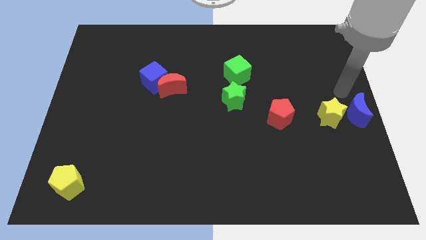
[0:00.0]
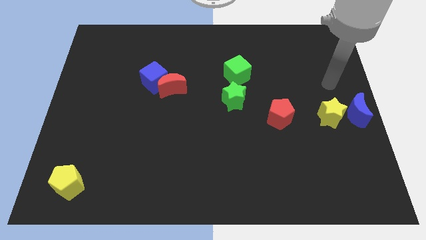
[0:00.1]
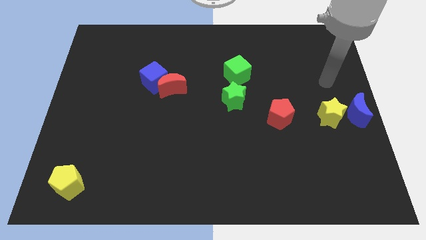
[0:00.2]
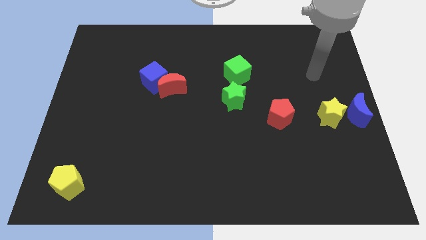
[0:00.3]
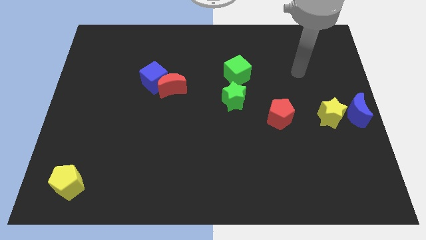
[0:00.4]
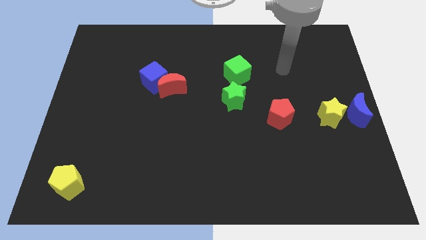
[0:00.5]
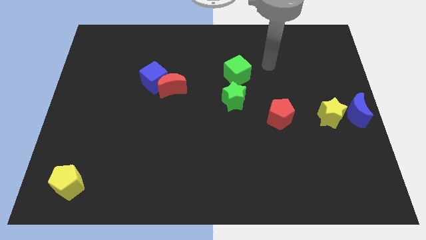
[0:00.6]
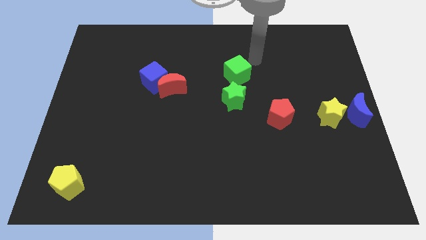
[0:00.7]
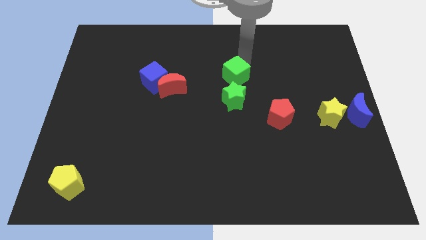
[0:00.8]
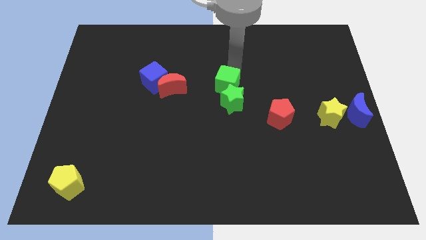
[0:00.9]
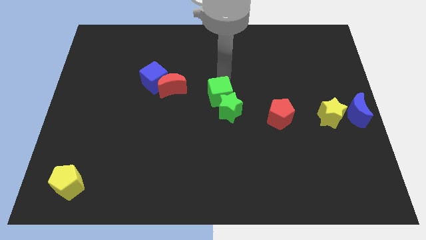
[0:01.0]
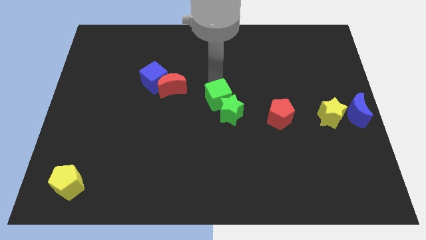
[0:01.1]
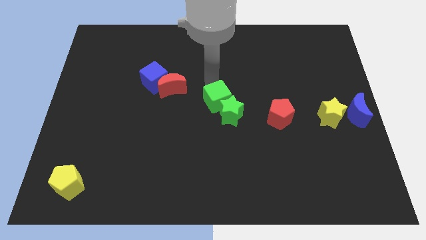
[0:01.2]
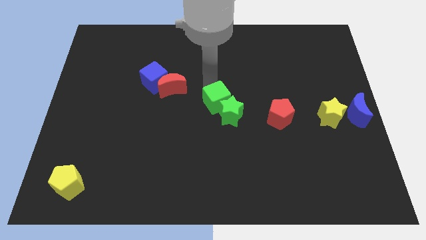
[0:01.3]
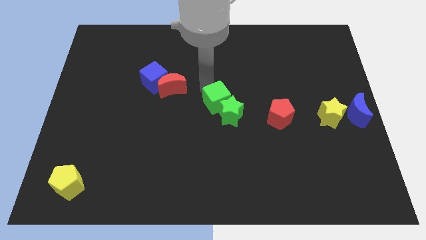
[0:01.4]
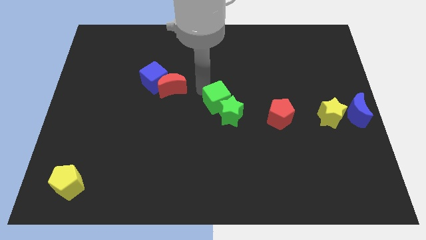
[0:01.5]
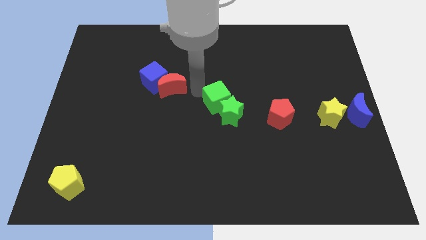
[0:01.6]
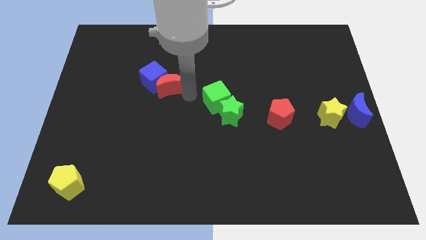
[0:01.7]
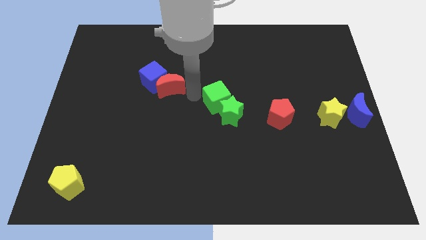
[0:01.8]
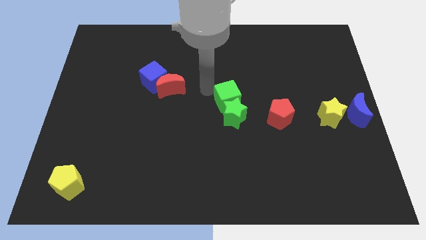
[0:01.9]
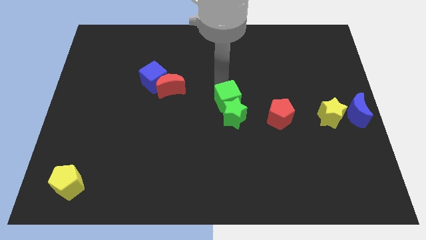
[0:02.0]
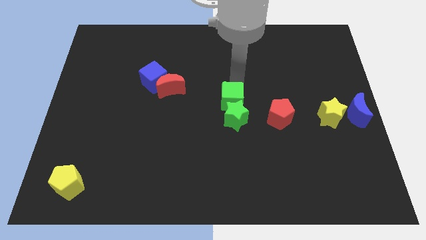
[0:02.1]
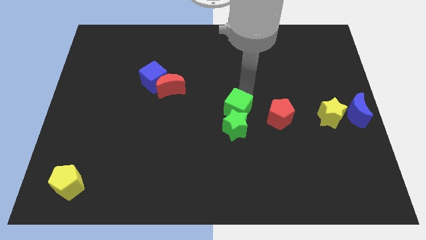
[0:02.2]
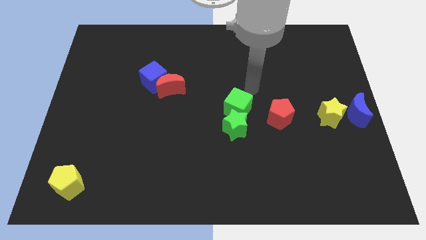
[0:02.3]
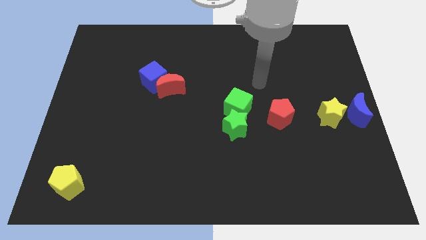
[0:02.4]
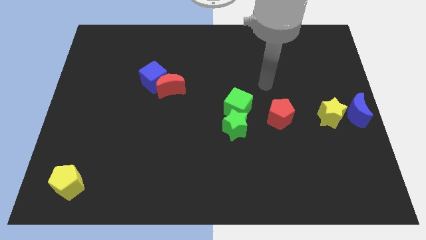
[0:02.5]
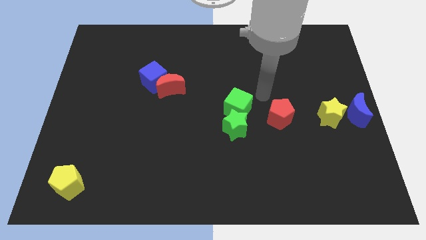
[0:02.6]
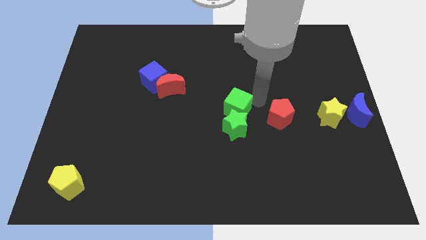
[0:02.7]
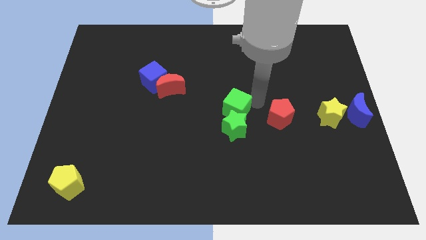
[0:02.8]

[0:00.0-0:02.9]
place green cube to the center of the board

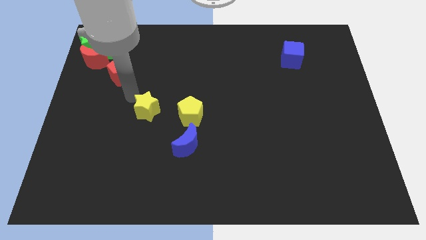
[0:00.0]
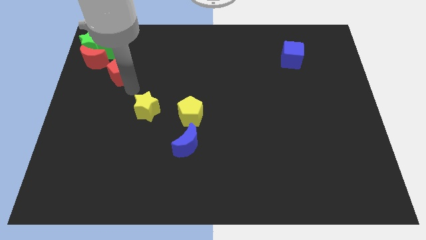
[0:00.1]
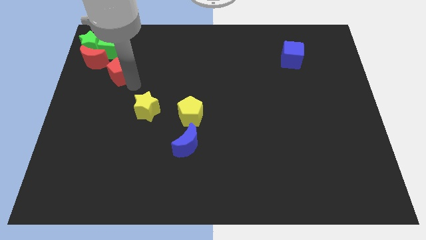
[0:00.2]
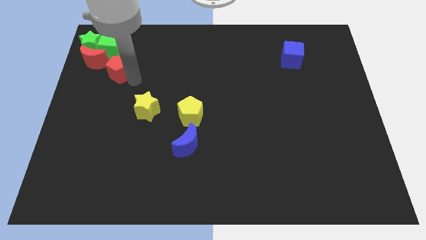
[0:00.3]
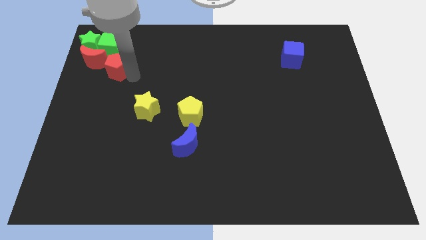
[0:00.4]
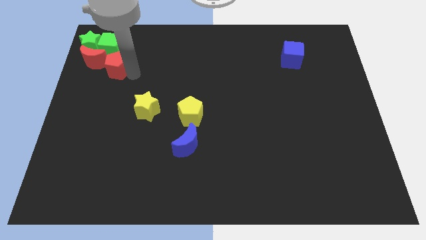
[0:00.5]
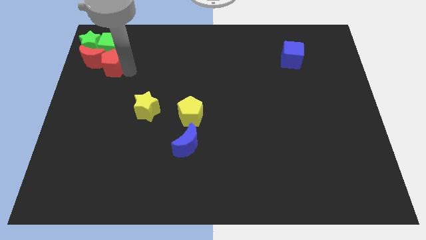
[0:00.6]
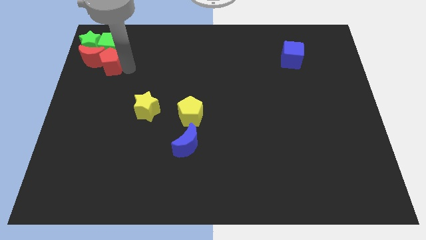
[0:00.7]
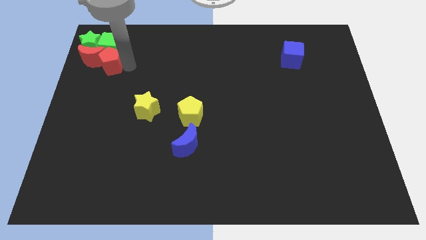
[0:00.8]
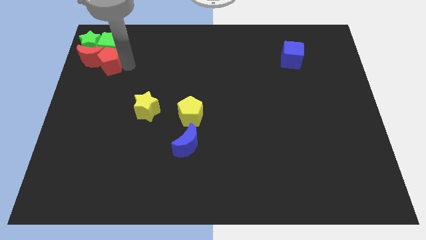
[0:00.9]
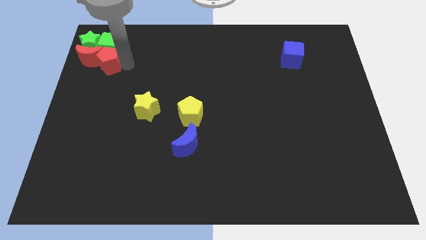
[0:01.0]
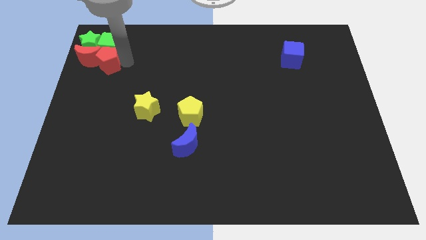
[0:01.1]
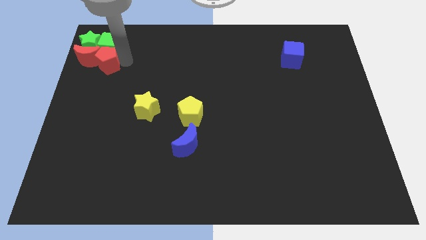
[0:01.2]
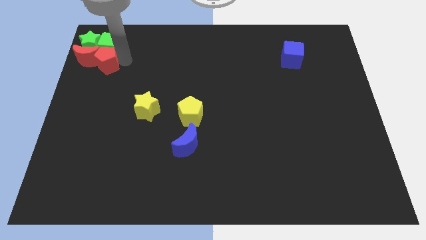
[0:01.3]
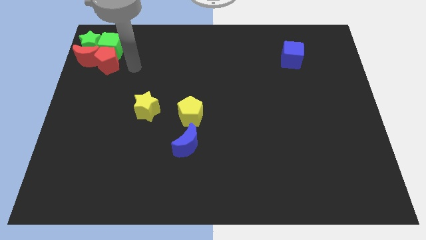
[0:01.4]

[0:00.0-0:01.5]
push the red pentagon into the group of objects

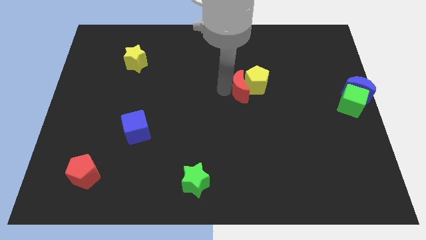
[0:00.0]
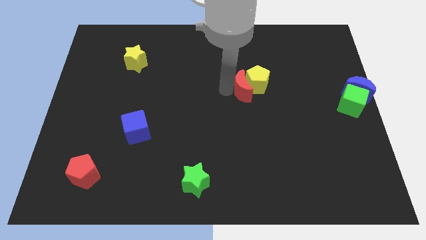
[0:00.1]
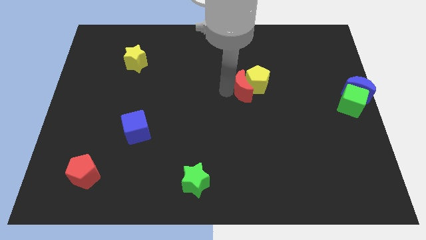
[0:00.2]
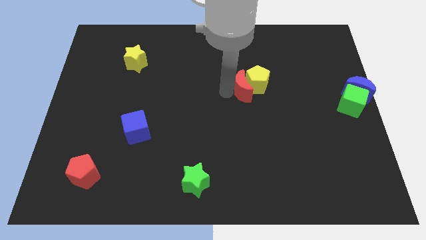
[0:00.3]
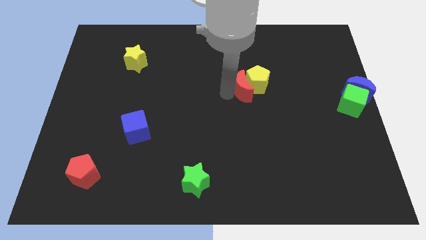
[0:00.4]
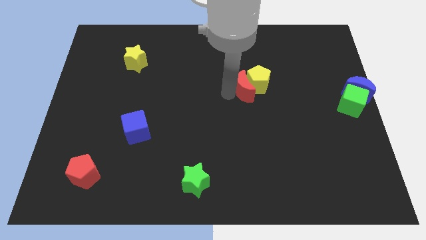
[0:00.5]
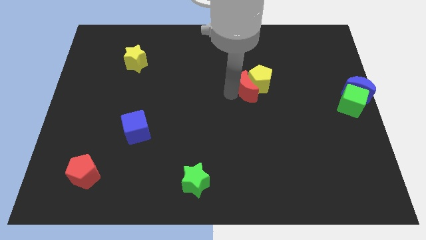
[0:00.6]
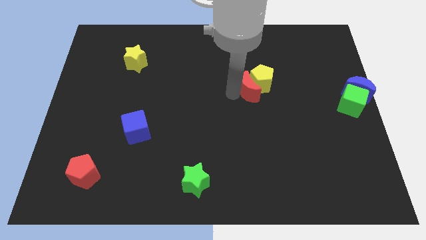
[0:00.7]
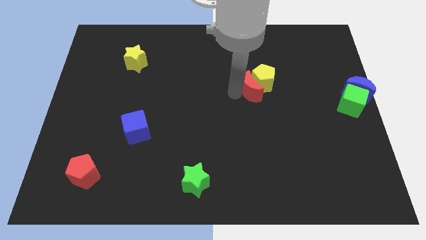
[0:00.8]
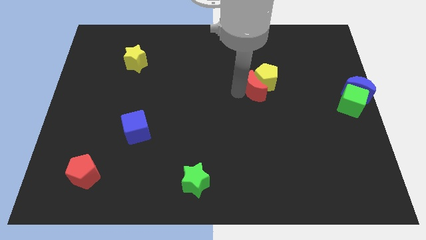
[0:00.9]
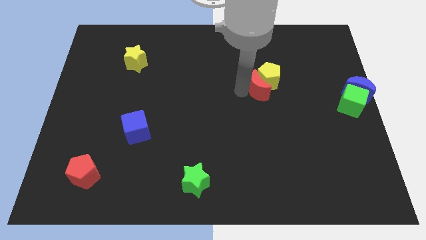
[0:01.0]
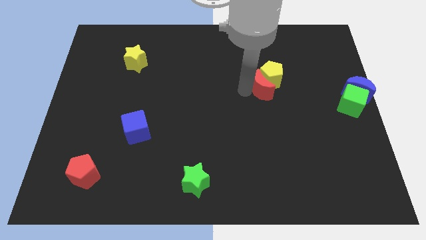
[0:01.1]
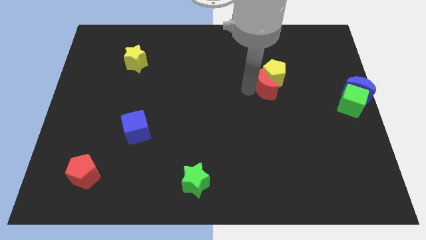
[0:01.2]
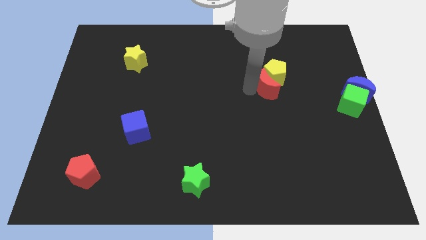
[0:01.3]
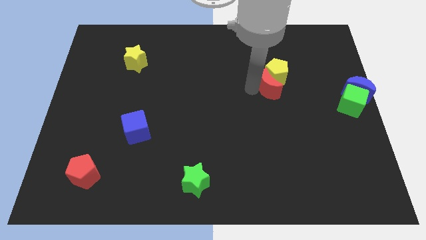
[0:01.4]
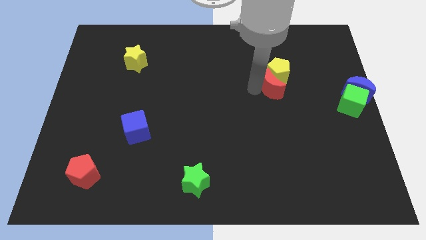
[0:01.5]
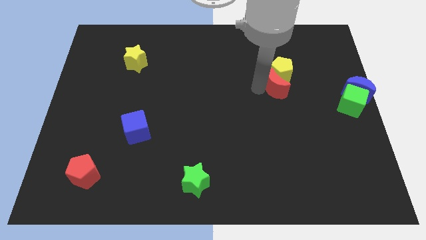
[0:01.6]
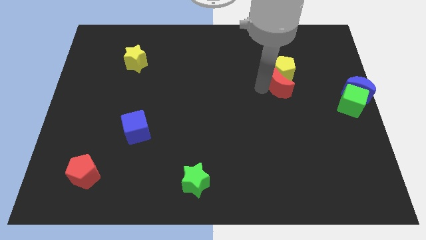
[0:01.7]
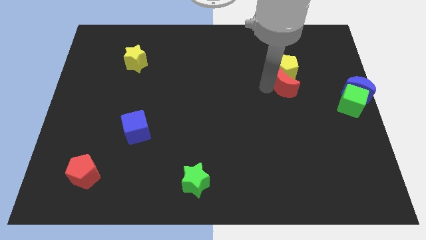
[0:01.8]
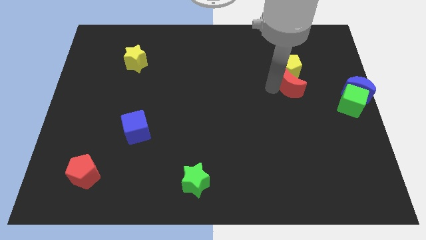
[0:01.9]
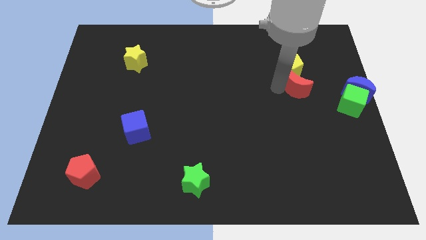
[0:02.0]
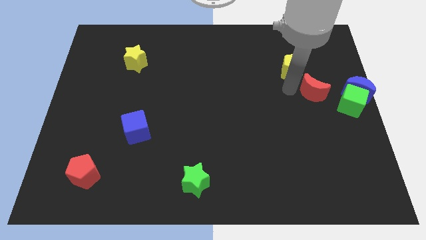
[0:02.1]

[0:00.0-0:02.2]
push the red moon yellow pentagon towards top side

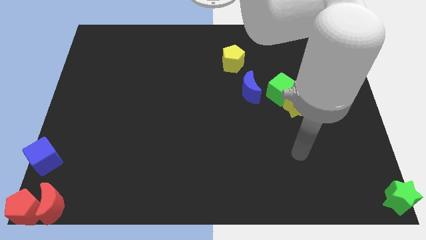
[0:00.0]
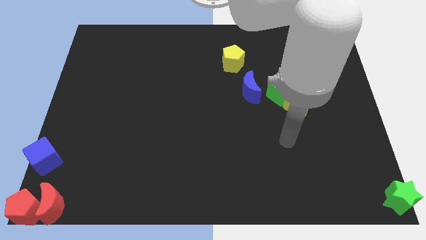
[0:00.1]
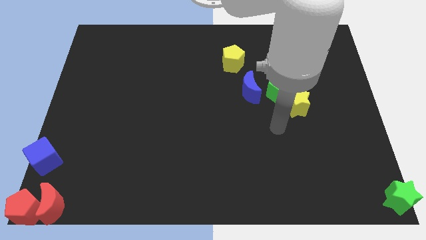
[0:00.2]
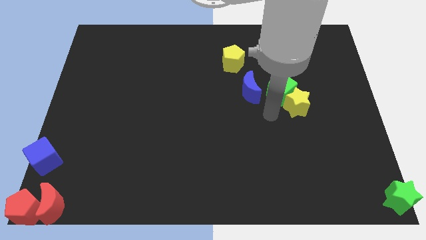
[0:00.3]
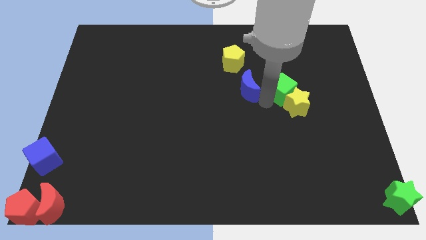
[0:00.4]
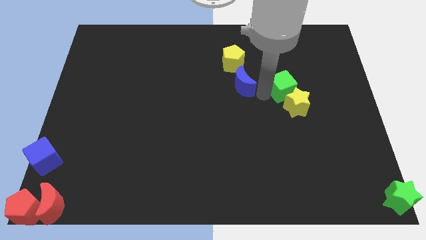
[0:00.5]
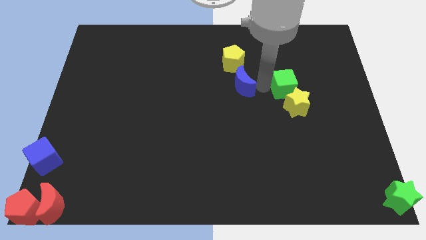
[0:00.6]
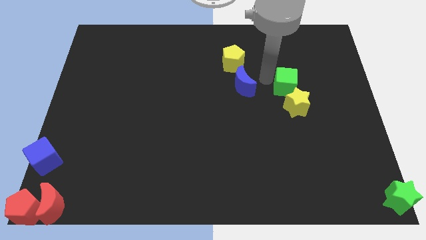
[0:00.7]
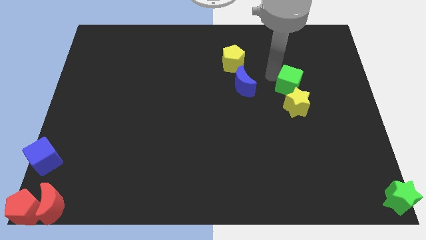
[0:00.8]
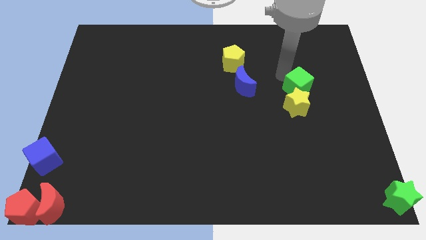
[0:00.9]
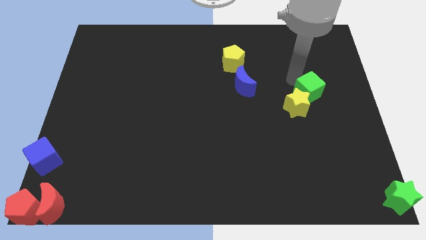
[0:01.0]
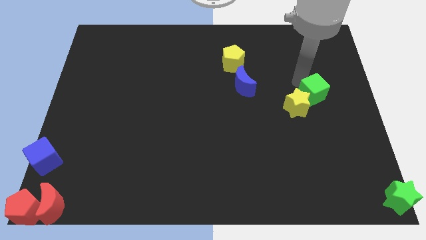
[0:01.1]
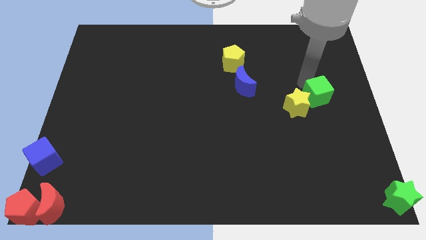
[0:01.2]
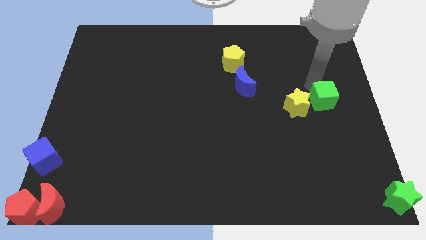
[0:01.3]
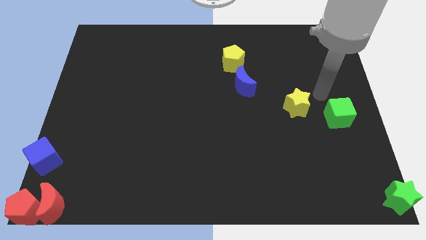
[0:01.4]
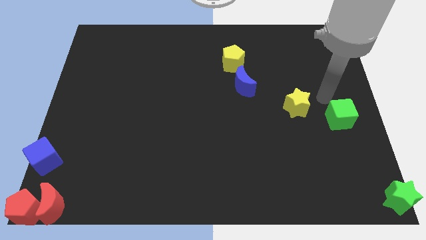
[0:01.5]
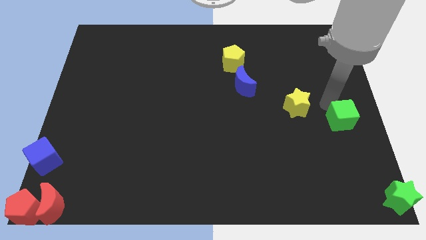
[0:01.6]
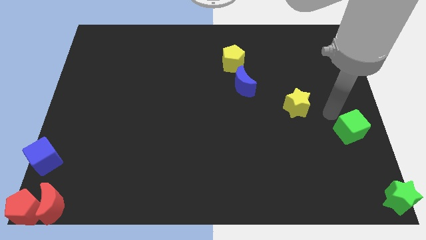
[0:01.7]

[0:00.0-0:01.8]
separate the green cube from yellow star

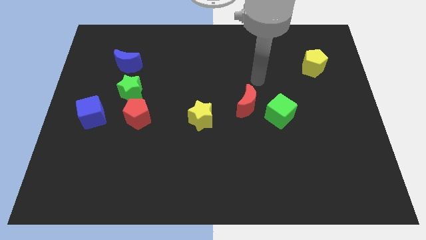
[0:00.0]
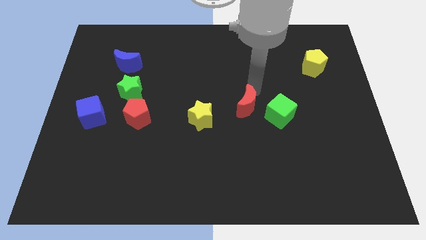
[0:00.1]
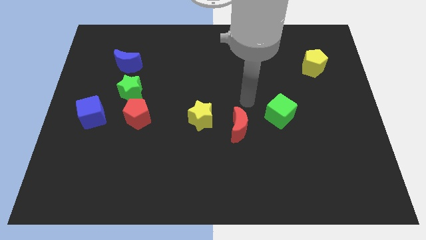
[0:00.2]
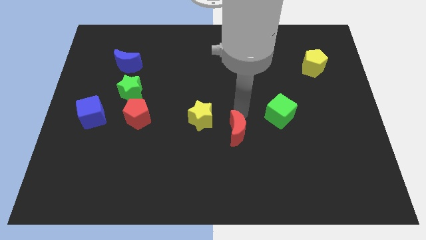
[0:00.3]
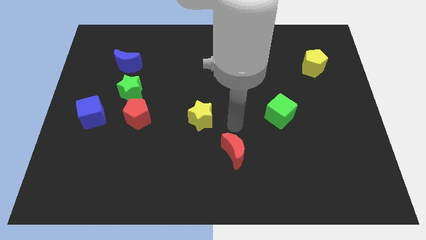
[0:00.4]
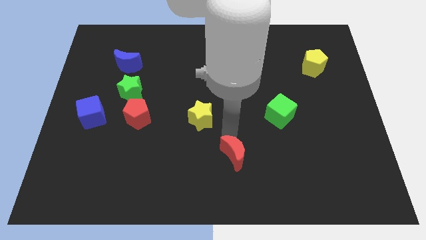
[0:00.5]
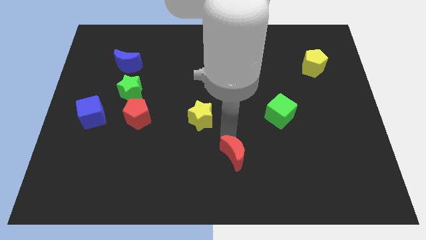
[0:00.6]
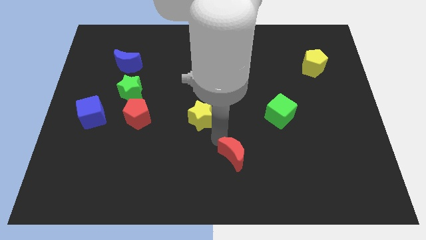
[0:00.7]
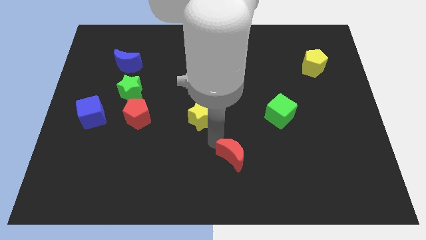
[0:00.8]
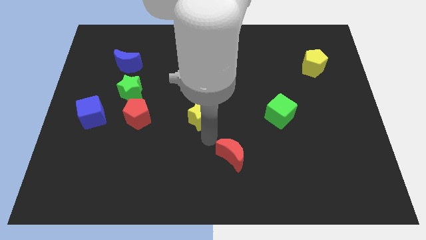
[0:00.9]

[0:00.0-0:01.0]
push the red crescent towards the bottom center
